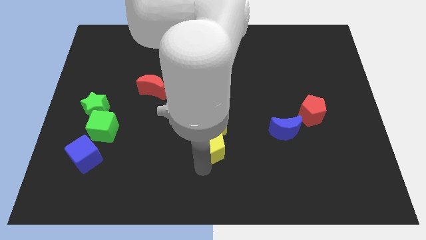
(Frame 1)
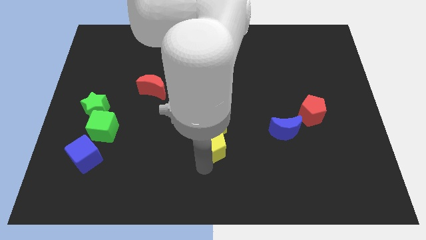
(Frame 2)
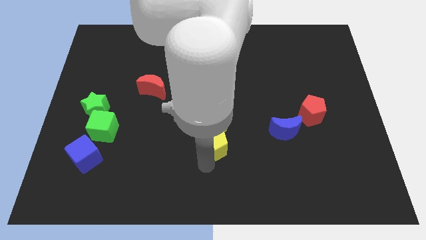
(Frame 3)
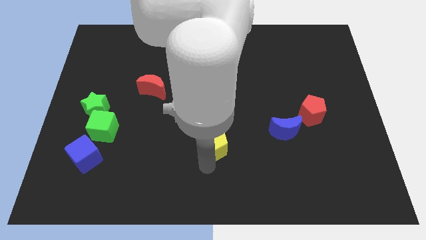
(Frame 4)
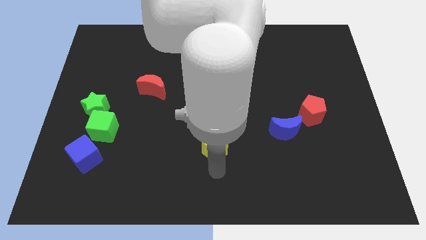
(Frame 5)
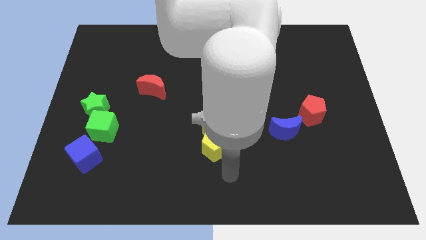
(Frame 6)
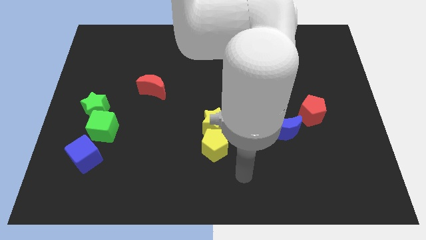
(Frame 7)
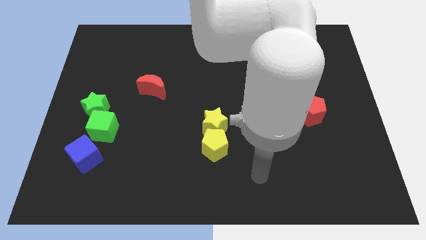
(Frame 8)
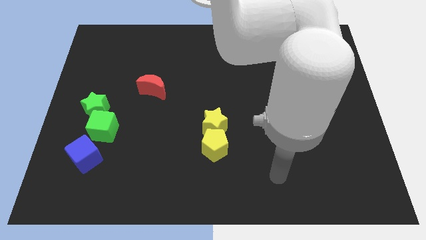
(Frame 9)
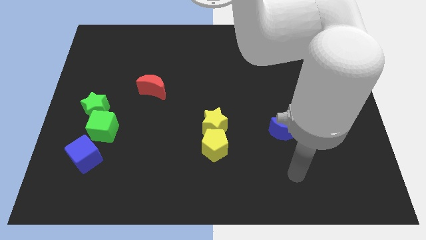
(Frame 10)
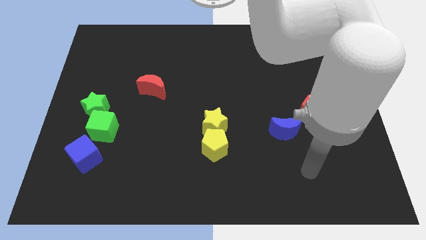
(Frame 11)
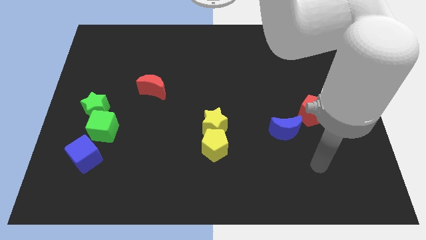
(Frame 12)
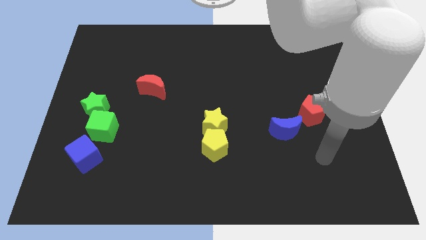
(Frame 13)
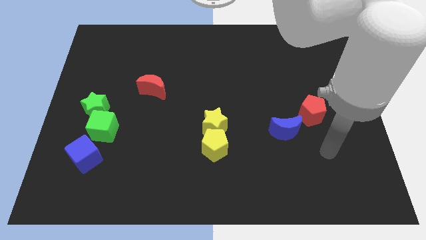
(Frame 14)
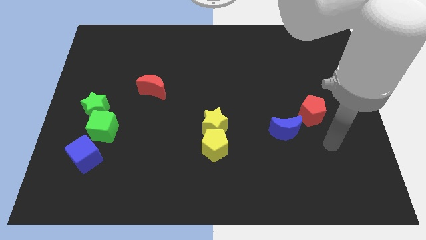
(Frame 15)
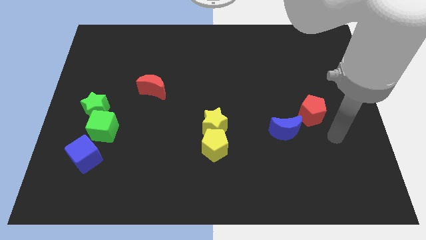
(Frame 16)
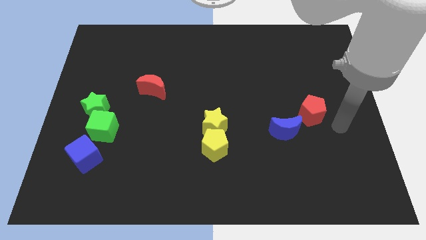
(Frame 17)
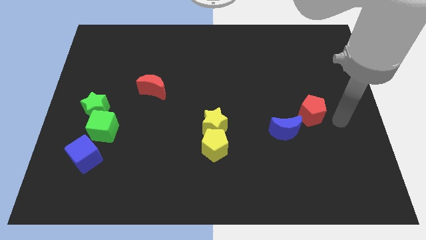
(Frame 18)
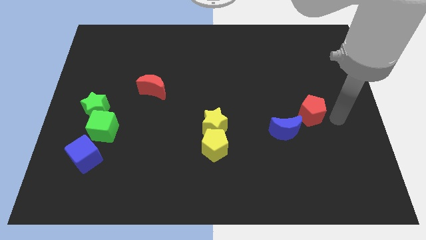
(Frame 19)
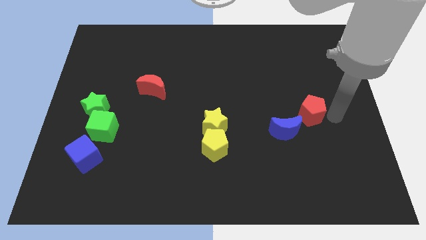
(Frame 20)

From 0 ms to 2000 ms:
point your arm to the right of the red pentagon

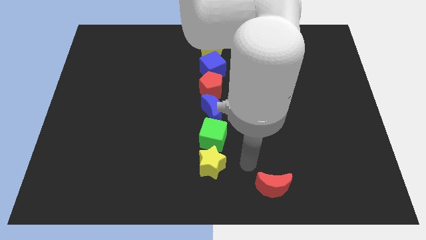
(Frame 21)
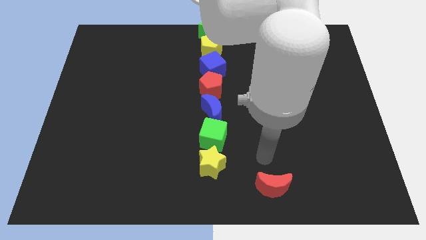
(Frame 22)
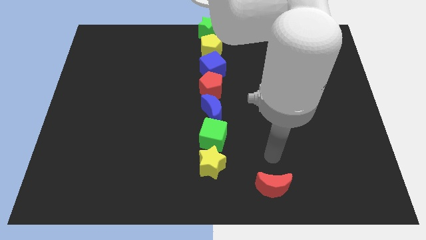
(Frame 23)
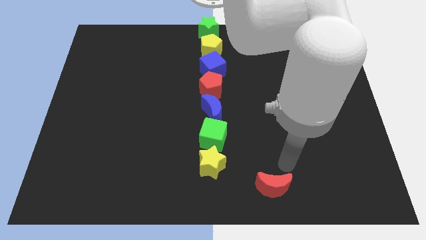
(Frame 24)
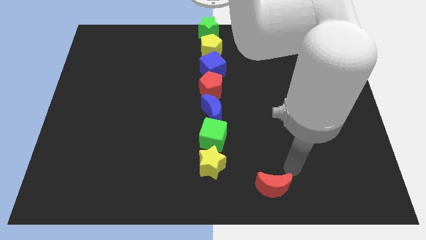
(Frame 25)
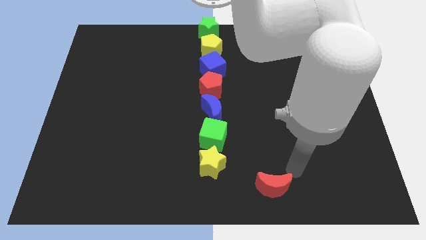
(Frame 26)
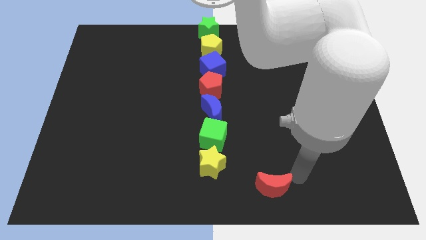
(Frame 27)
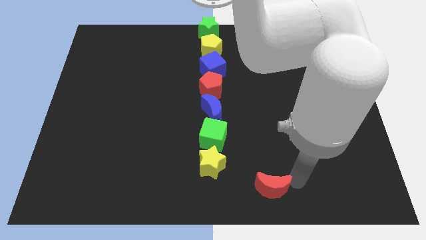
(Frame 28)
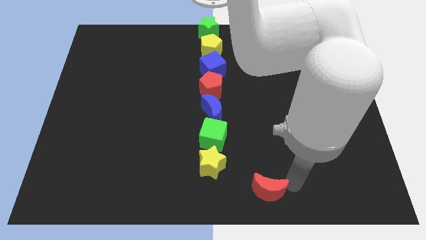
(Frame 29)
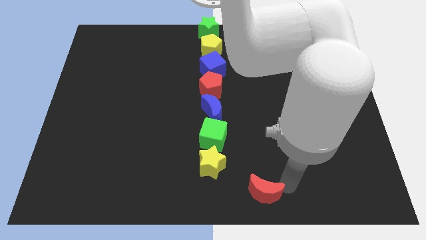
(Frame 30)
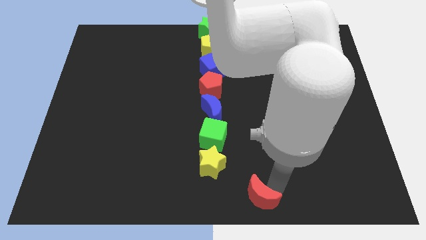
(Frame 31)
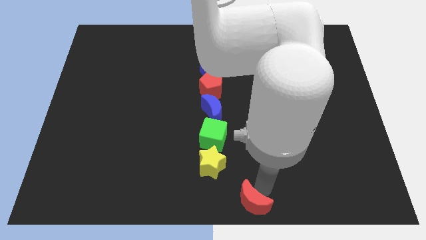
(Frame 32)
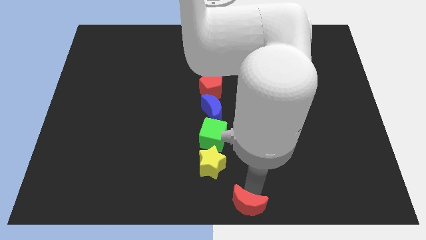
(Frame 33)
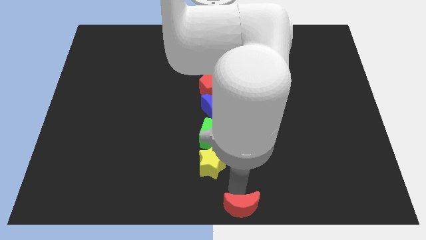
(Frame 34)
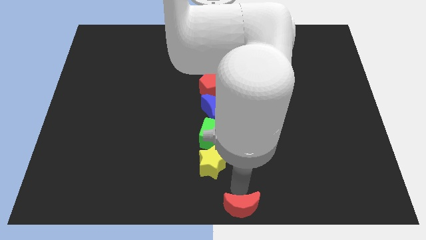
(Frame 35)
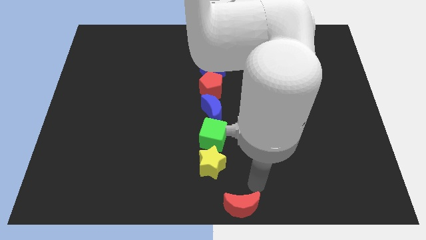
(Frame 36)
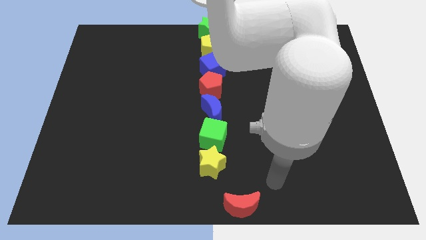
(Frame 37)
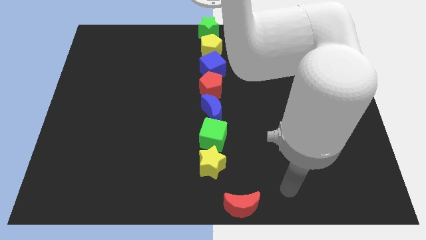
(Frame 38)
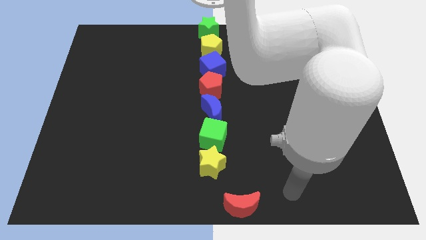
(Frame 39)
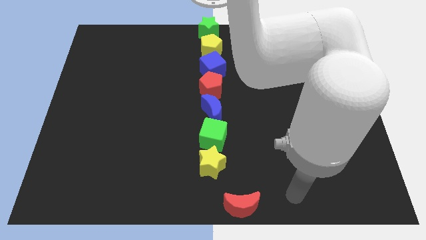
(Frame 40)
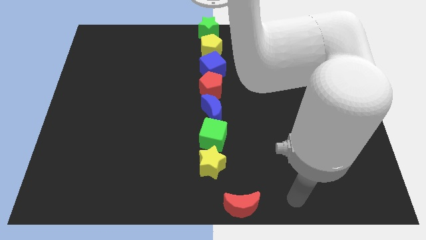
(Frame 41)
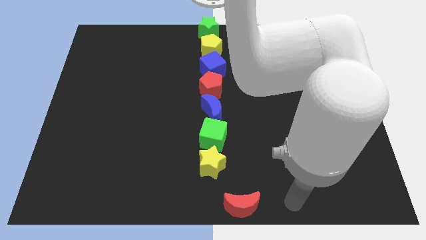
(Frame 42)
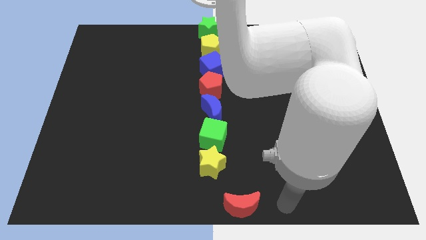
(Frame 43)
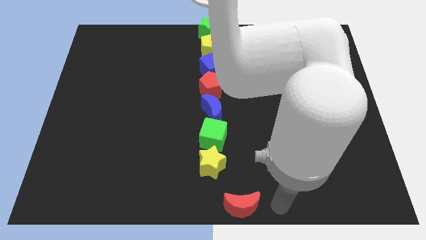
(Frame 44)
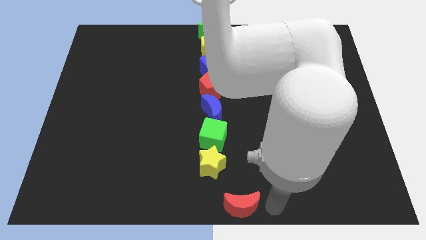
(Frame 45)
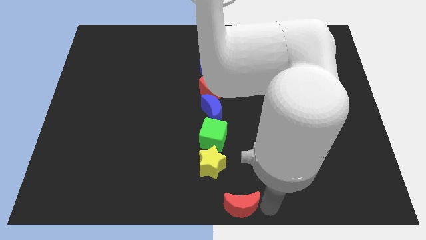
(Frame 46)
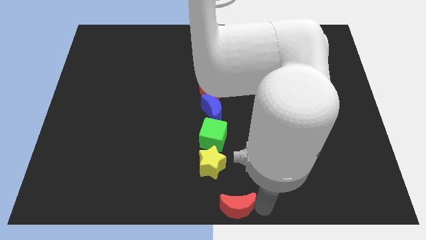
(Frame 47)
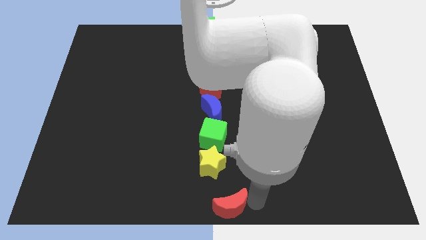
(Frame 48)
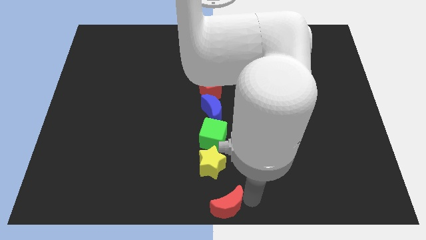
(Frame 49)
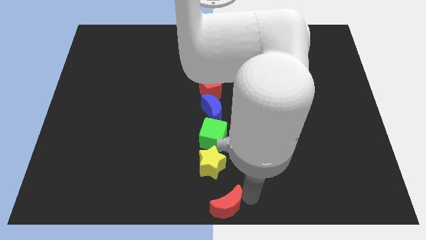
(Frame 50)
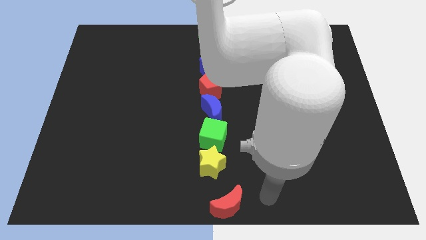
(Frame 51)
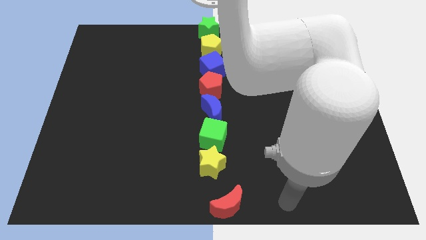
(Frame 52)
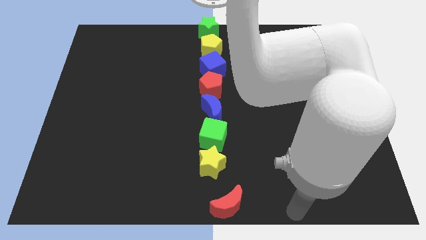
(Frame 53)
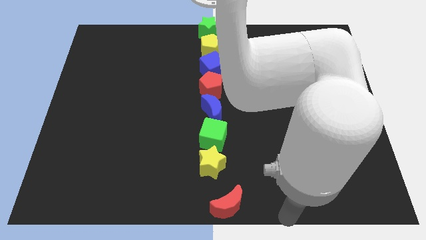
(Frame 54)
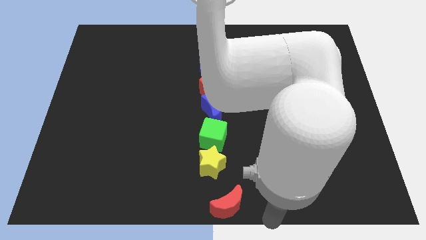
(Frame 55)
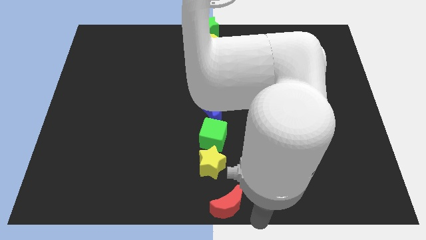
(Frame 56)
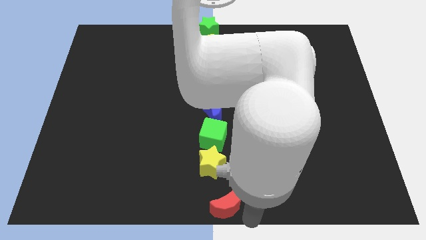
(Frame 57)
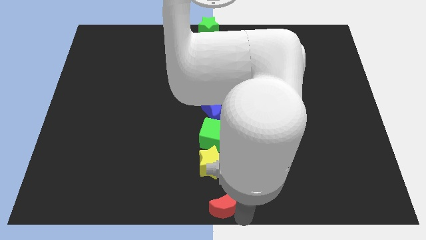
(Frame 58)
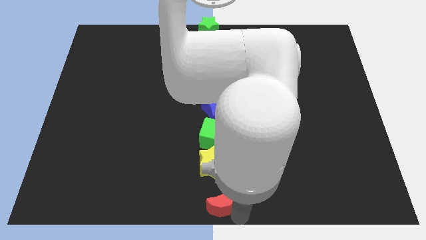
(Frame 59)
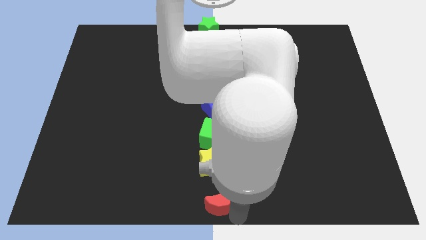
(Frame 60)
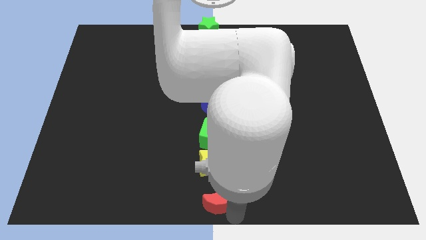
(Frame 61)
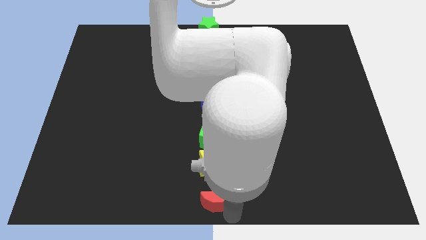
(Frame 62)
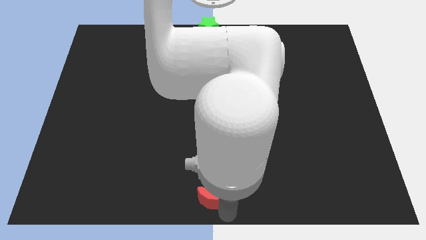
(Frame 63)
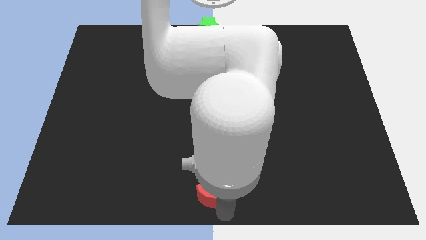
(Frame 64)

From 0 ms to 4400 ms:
move the red crescent to the bottom of the yellow star

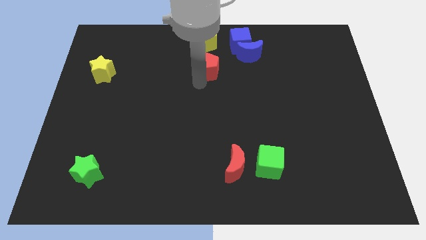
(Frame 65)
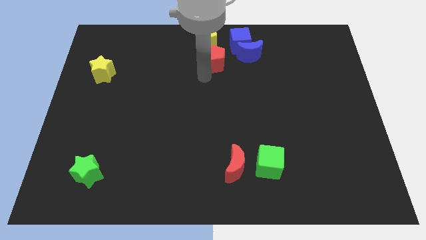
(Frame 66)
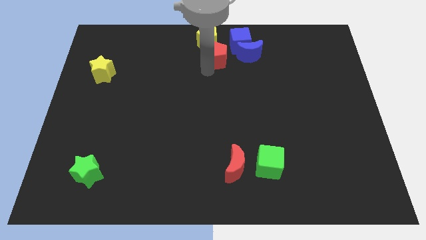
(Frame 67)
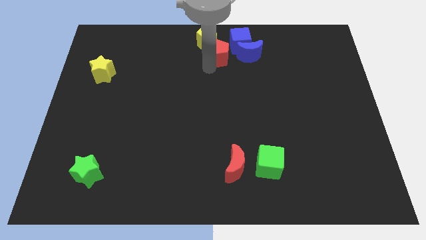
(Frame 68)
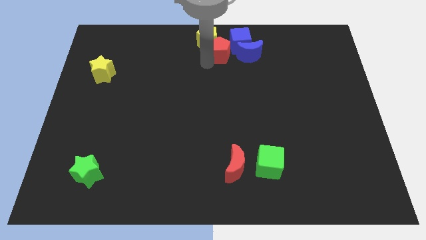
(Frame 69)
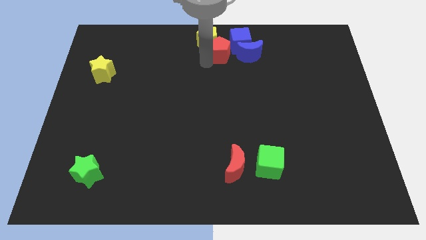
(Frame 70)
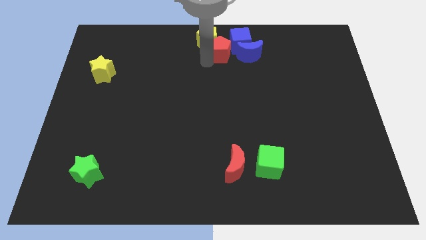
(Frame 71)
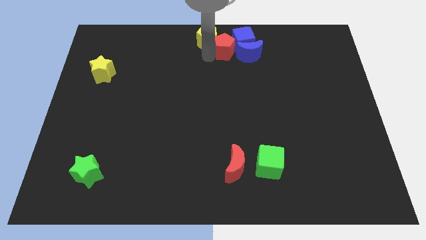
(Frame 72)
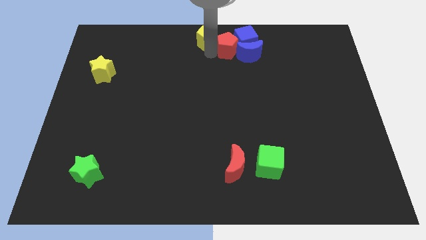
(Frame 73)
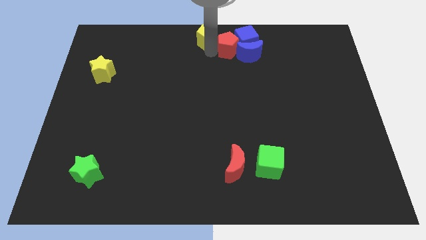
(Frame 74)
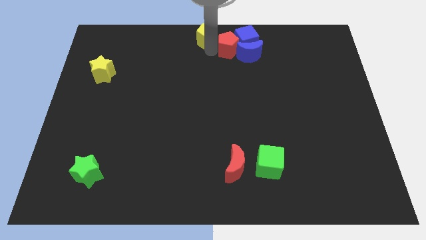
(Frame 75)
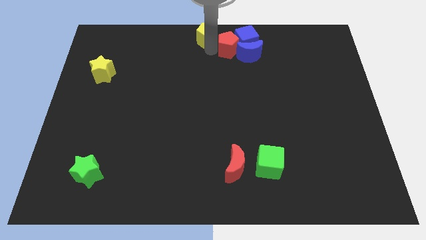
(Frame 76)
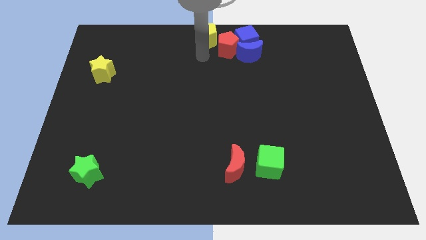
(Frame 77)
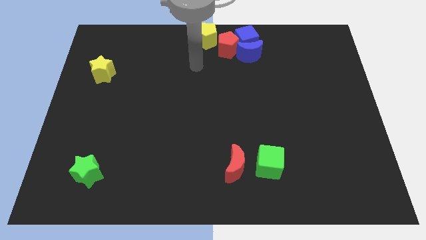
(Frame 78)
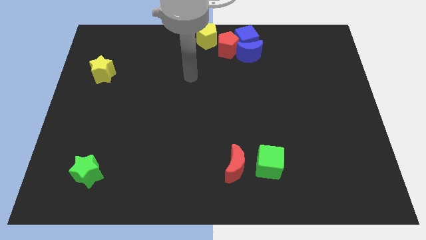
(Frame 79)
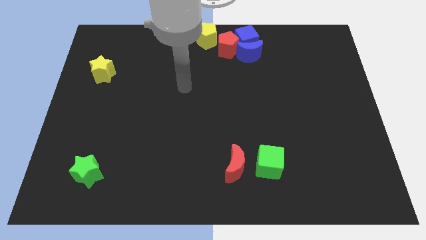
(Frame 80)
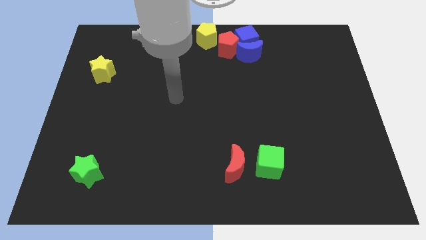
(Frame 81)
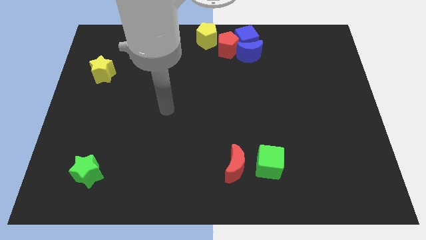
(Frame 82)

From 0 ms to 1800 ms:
drag the red pentagon between the yellow pentagon and the blue moon

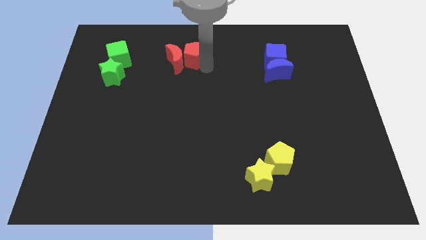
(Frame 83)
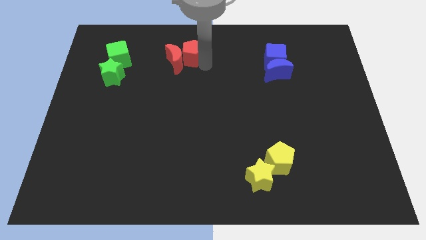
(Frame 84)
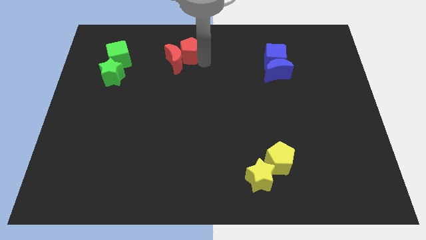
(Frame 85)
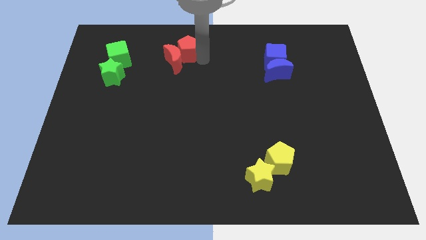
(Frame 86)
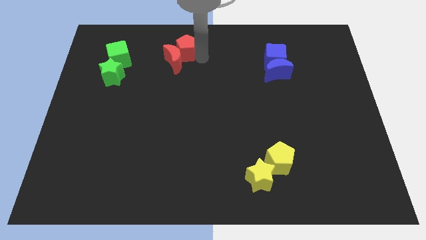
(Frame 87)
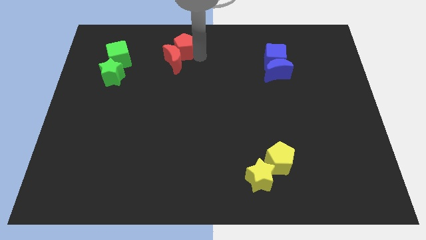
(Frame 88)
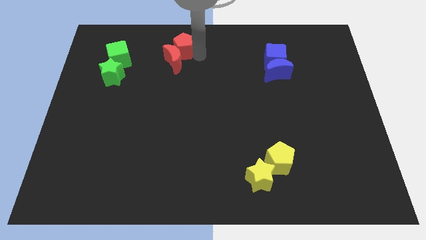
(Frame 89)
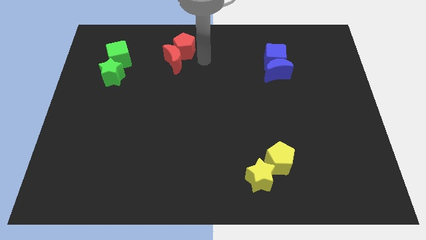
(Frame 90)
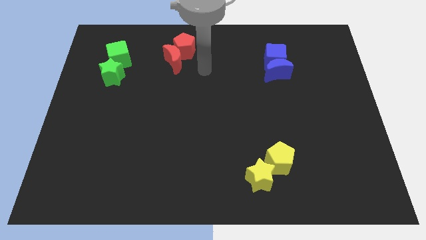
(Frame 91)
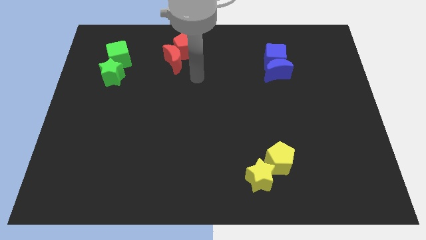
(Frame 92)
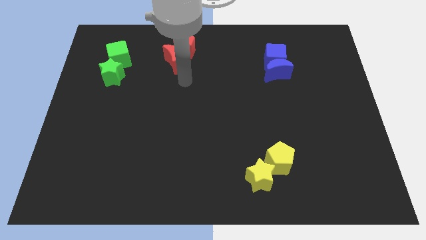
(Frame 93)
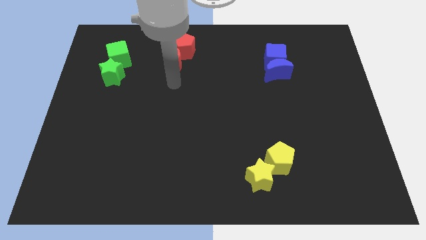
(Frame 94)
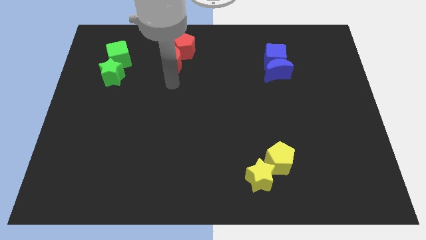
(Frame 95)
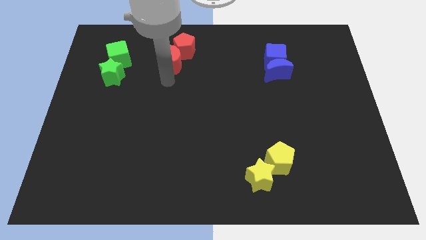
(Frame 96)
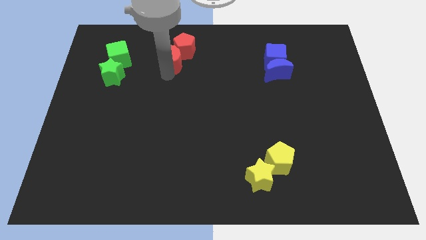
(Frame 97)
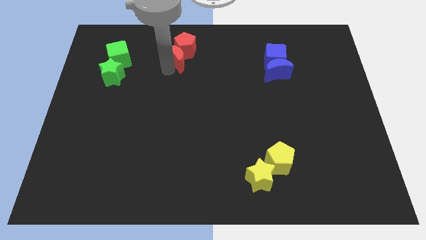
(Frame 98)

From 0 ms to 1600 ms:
push the red pentagon and red crescent to the top
